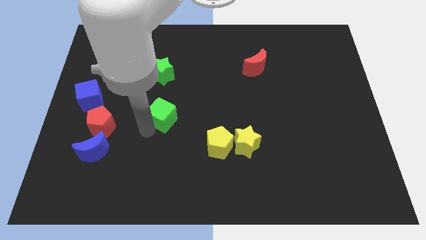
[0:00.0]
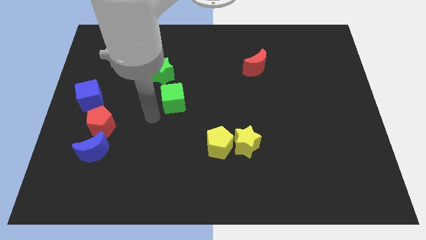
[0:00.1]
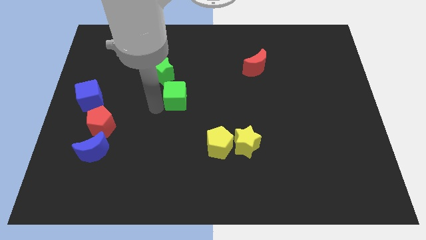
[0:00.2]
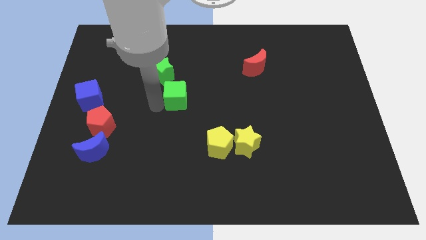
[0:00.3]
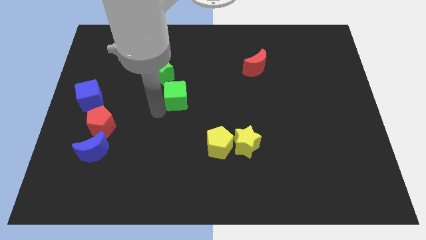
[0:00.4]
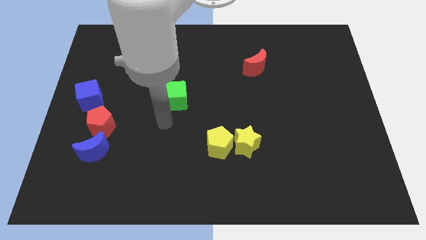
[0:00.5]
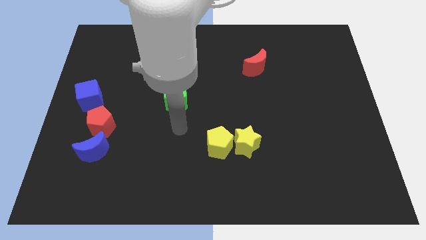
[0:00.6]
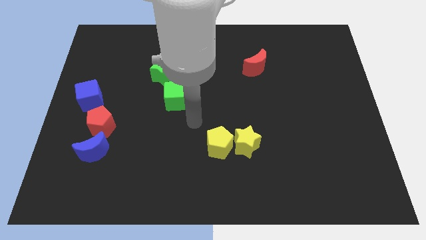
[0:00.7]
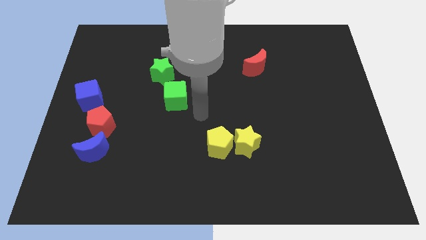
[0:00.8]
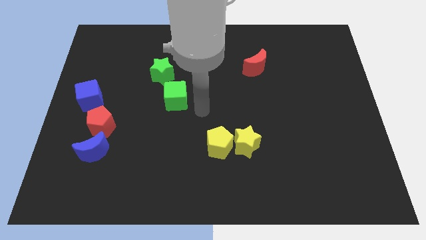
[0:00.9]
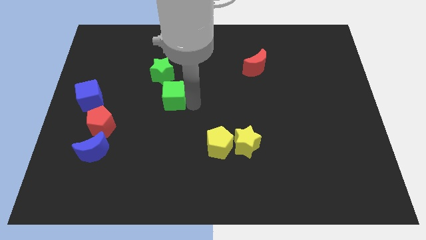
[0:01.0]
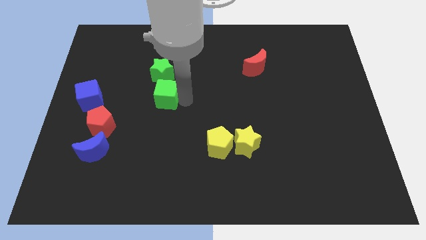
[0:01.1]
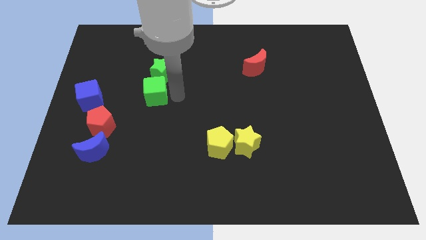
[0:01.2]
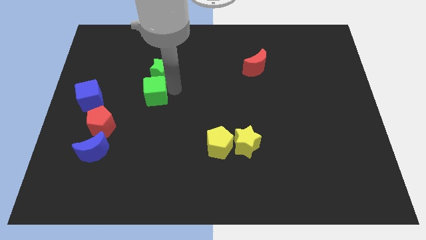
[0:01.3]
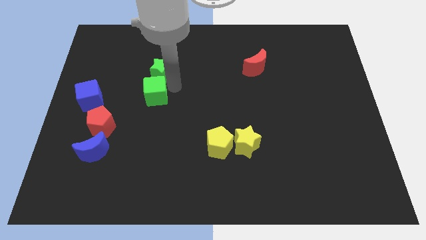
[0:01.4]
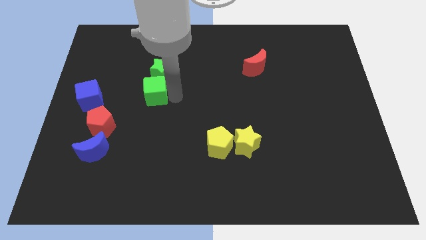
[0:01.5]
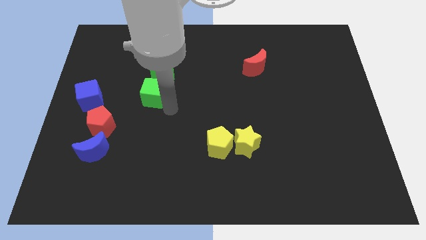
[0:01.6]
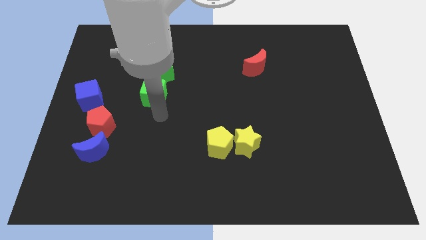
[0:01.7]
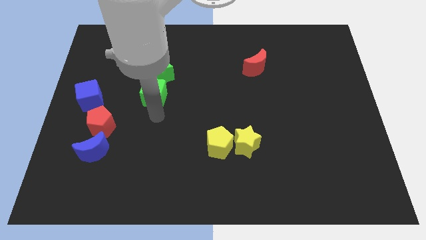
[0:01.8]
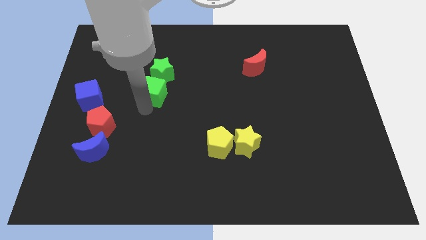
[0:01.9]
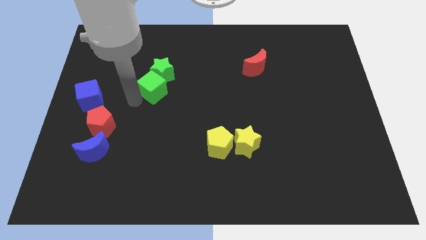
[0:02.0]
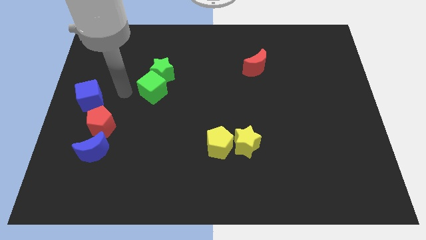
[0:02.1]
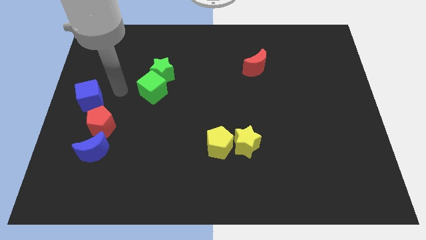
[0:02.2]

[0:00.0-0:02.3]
move the green cube into green star

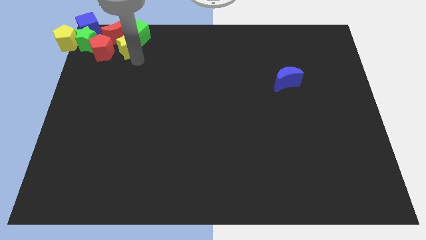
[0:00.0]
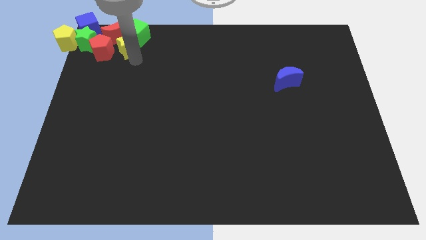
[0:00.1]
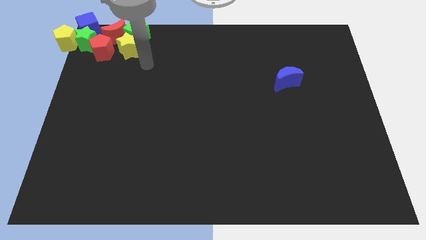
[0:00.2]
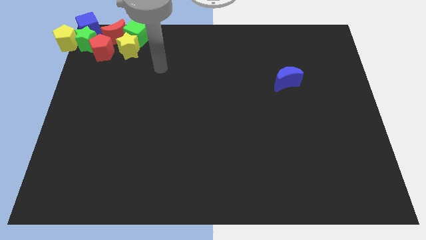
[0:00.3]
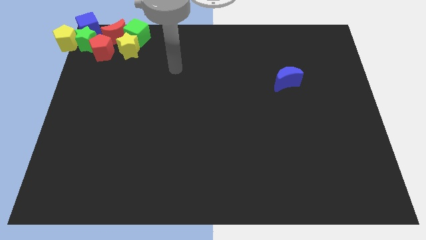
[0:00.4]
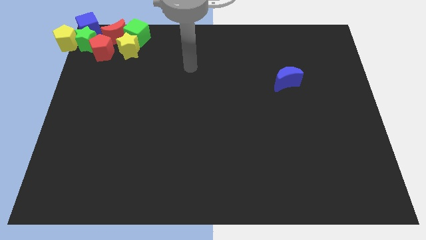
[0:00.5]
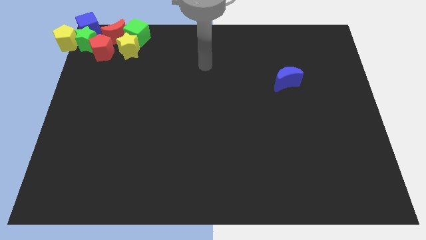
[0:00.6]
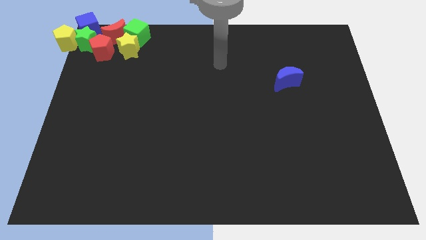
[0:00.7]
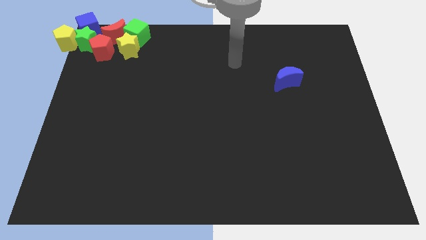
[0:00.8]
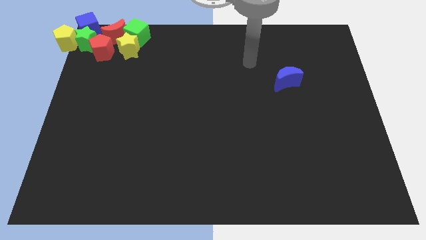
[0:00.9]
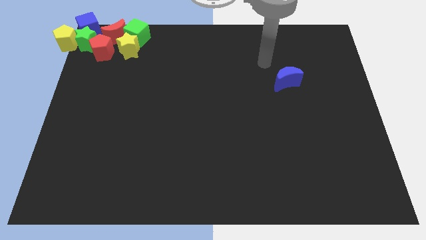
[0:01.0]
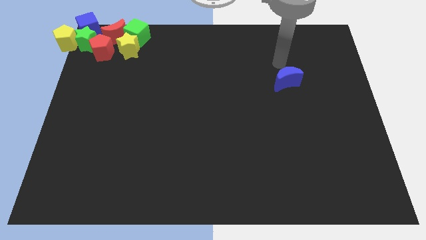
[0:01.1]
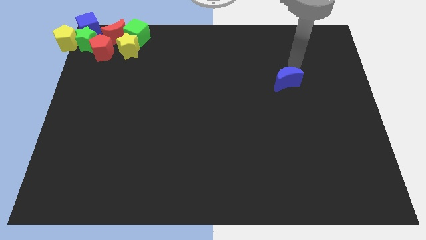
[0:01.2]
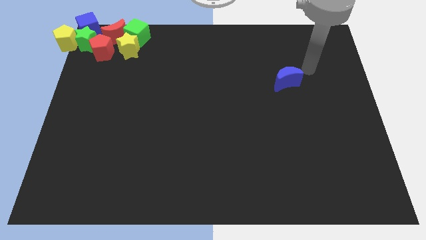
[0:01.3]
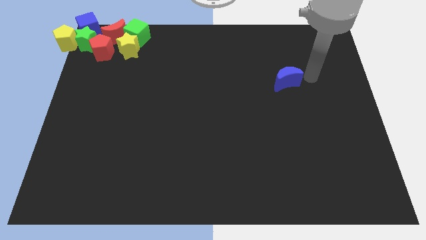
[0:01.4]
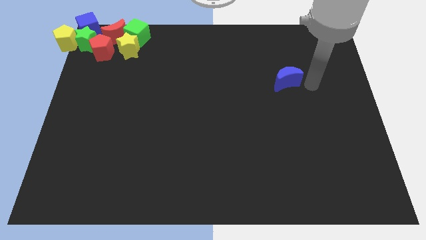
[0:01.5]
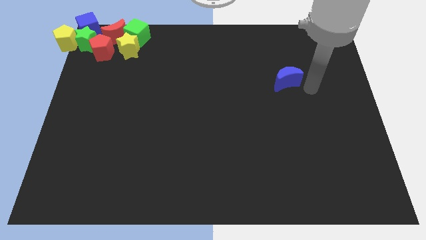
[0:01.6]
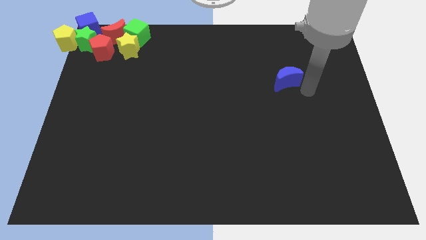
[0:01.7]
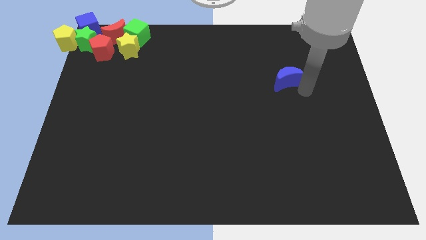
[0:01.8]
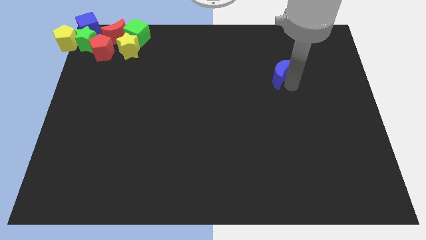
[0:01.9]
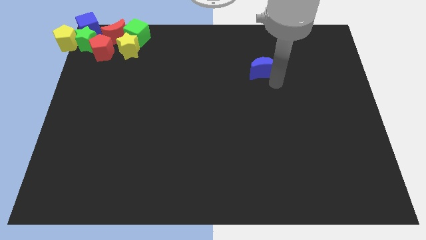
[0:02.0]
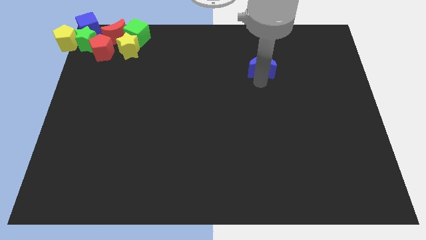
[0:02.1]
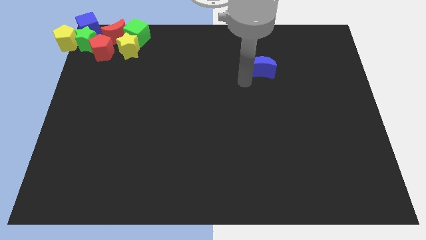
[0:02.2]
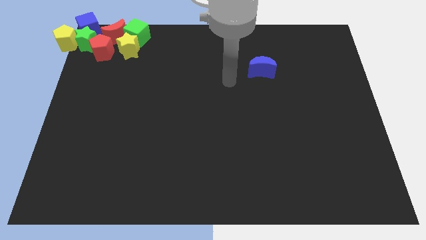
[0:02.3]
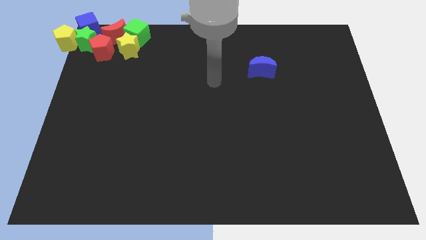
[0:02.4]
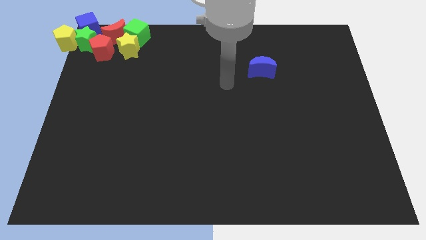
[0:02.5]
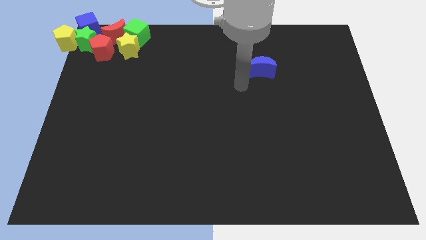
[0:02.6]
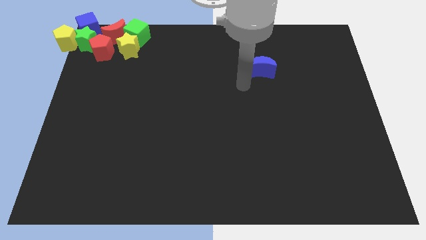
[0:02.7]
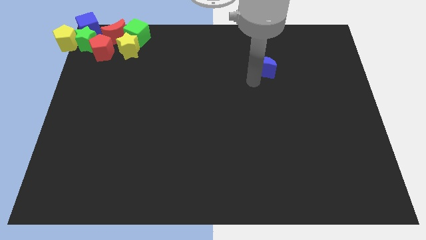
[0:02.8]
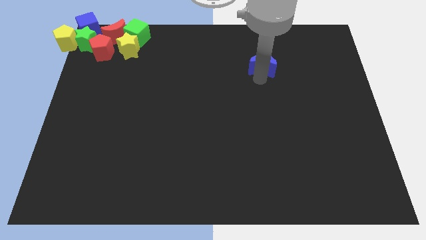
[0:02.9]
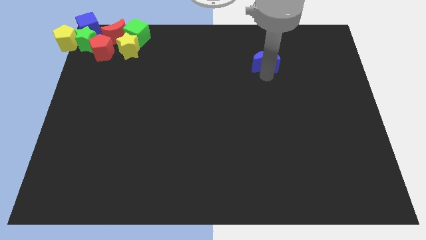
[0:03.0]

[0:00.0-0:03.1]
move the arm away from the yellow star

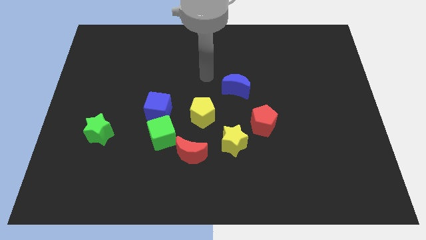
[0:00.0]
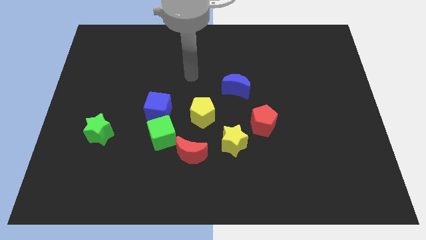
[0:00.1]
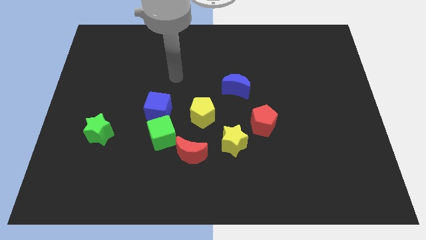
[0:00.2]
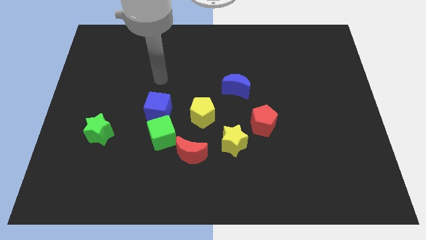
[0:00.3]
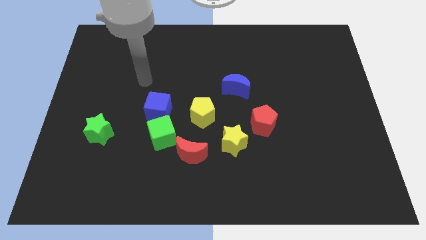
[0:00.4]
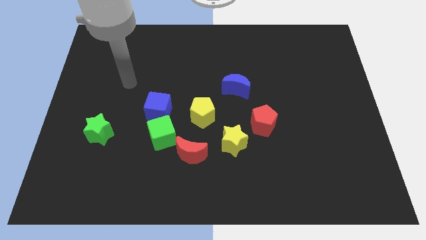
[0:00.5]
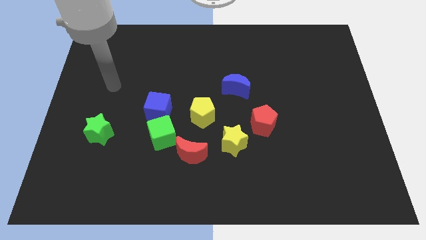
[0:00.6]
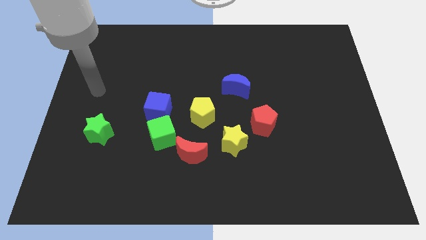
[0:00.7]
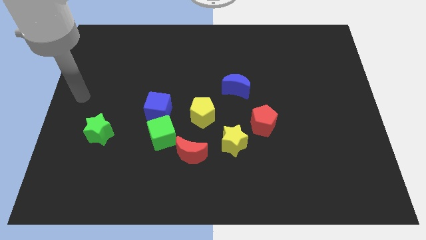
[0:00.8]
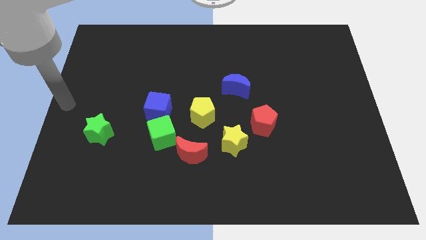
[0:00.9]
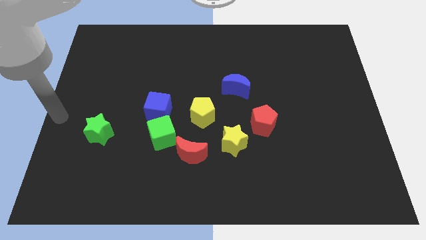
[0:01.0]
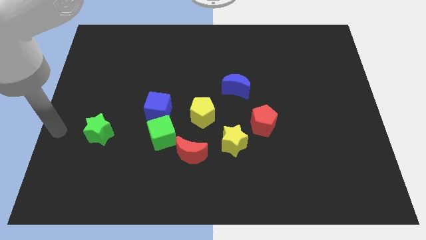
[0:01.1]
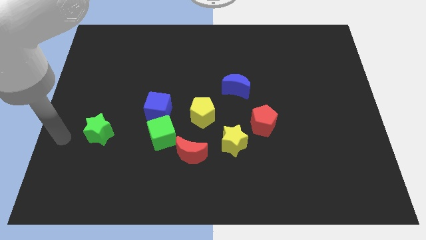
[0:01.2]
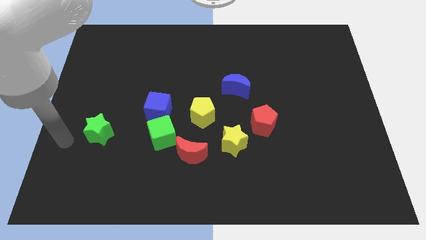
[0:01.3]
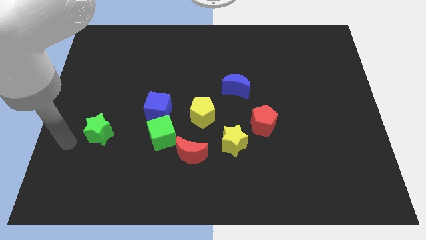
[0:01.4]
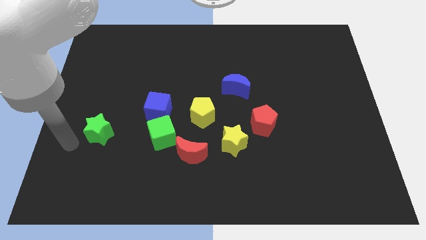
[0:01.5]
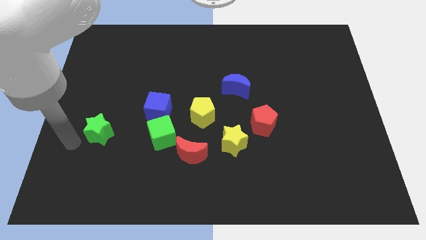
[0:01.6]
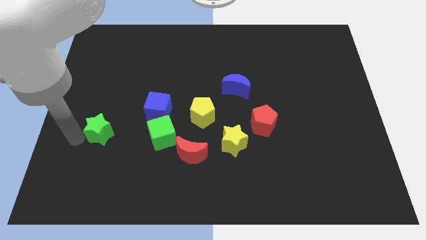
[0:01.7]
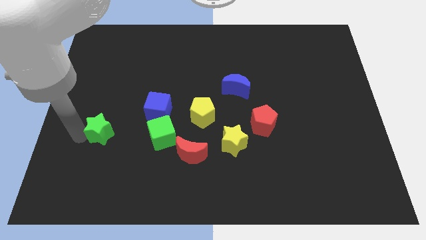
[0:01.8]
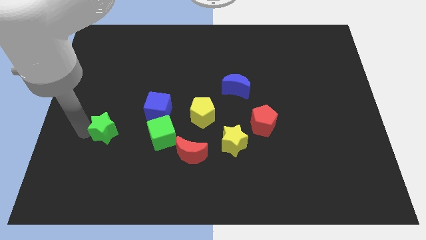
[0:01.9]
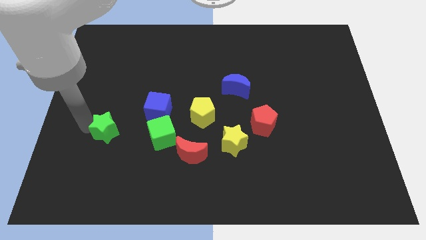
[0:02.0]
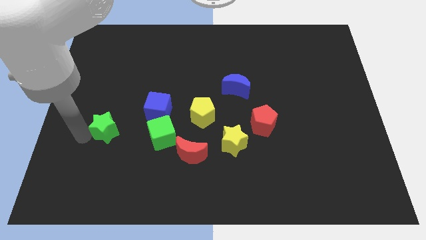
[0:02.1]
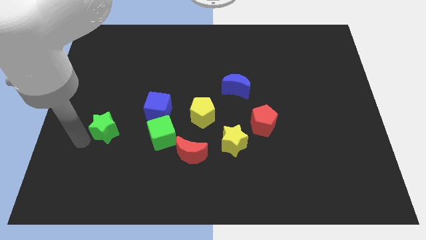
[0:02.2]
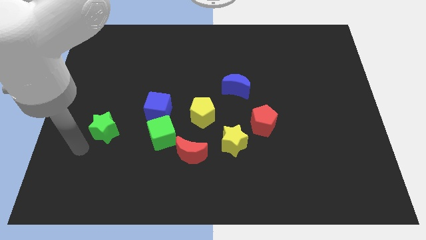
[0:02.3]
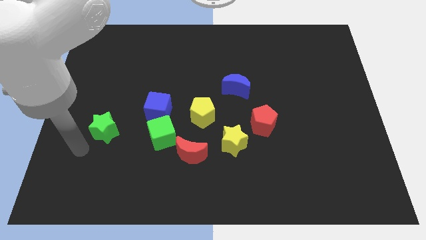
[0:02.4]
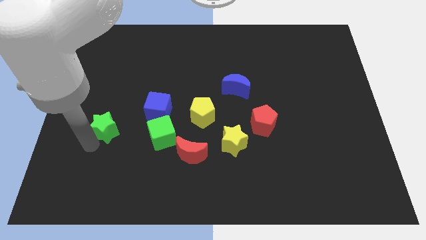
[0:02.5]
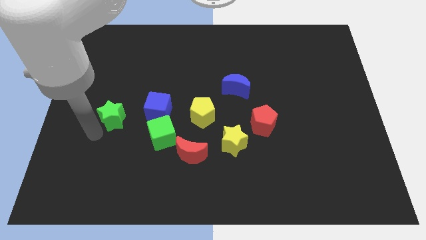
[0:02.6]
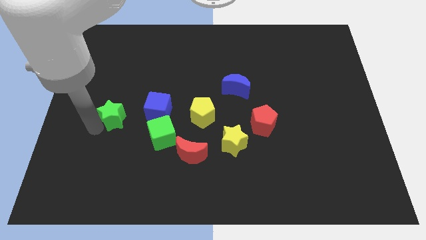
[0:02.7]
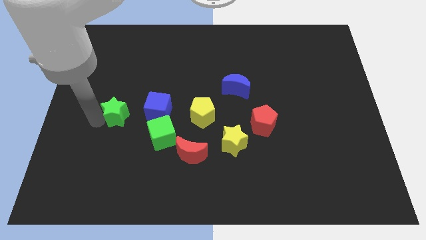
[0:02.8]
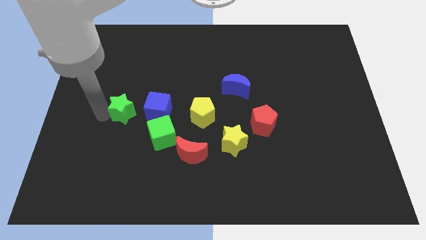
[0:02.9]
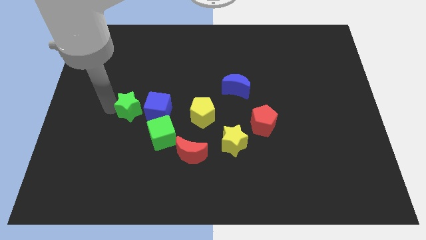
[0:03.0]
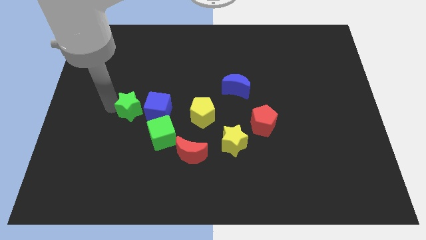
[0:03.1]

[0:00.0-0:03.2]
place the green star parallel left to the blue cube

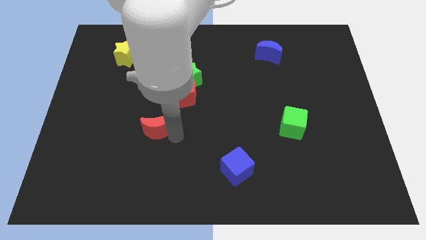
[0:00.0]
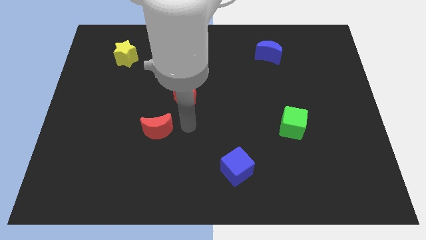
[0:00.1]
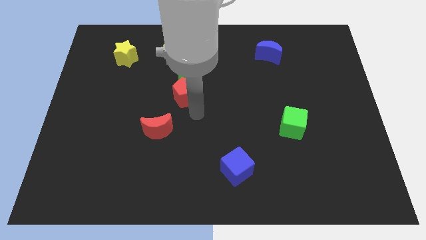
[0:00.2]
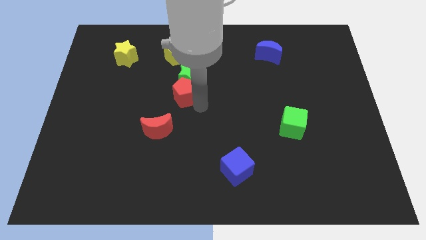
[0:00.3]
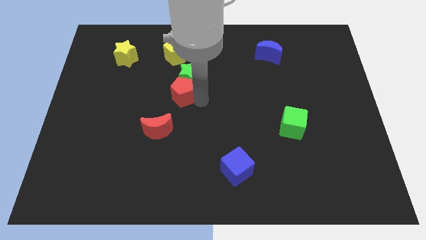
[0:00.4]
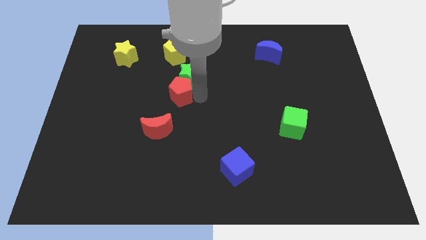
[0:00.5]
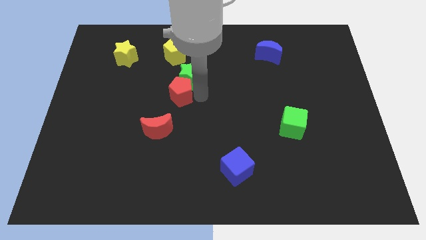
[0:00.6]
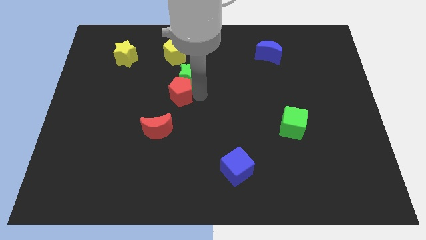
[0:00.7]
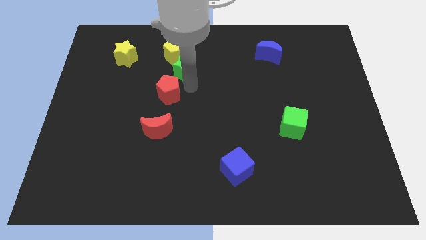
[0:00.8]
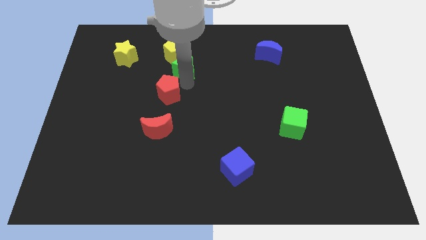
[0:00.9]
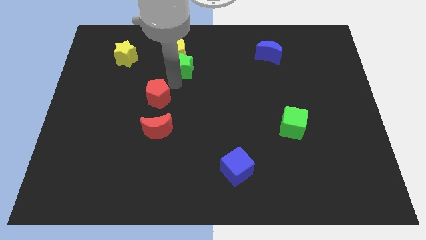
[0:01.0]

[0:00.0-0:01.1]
separate the red pentagon from the green star
